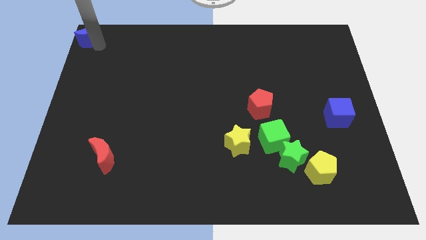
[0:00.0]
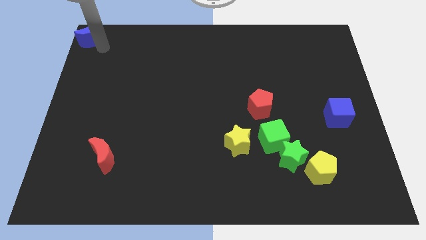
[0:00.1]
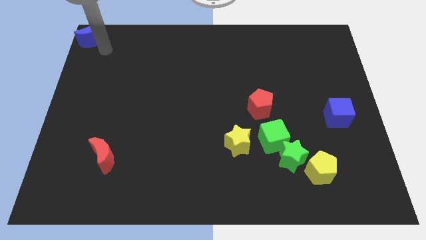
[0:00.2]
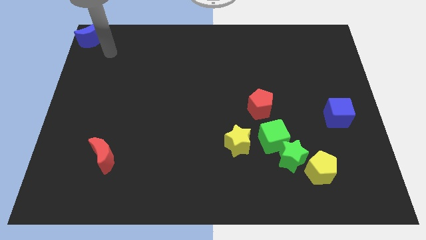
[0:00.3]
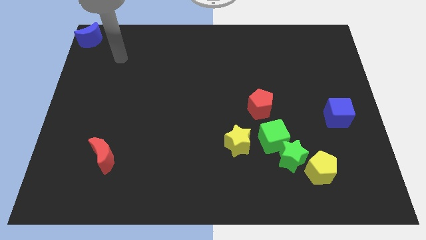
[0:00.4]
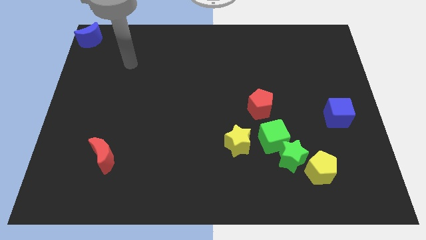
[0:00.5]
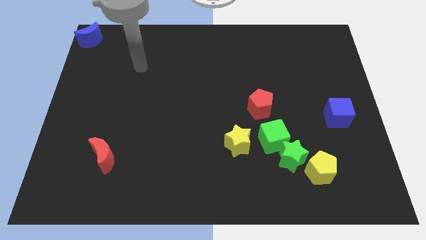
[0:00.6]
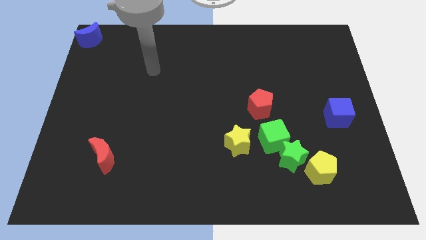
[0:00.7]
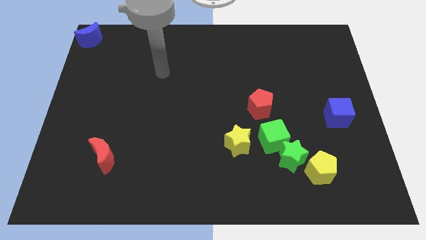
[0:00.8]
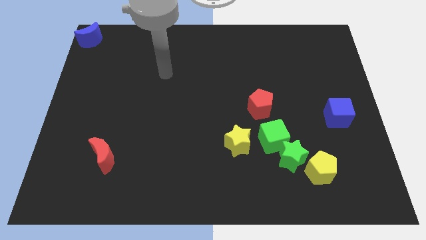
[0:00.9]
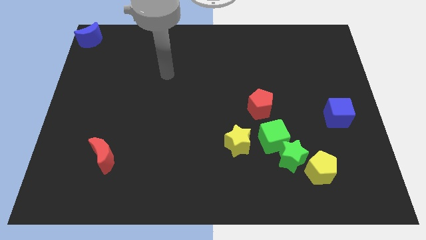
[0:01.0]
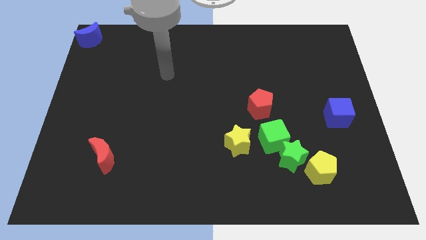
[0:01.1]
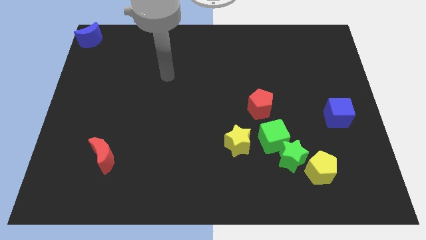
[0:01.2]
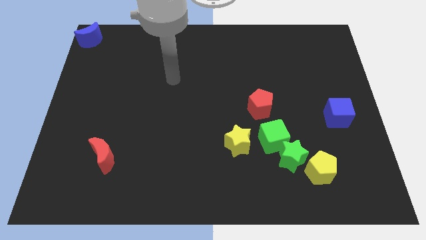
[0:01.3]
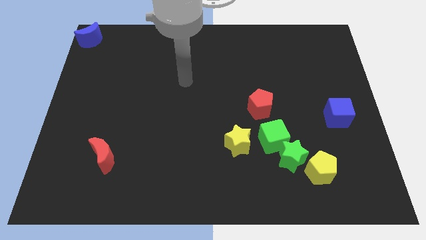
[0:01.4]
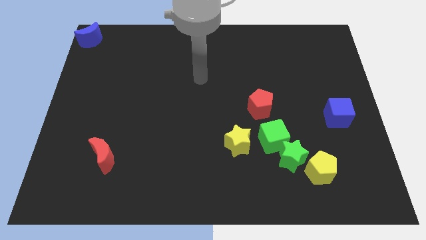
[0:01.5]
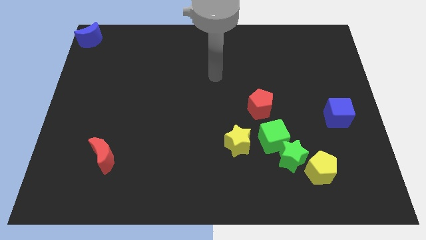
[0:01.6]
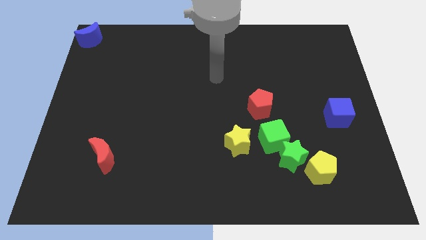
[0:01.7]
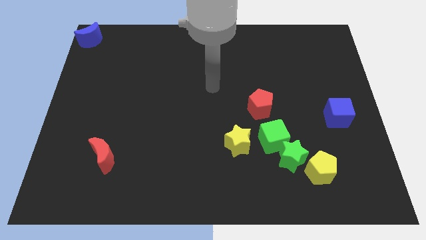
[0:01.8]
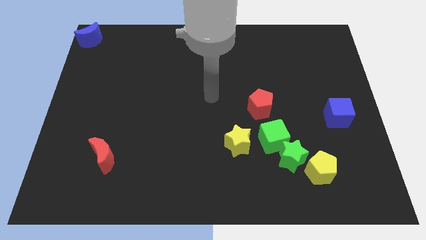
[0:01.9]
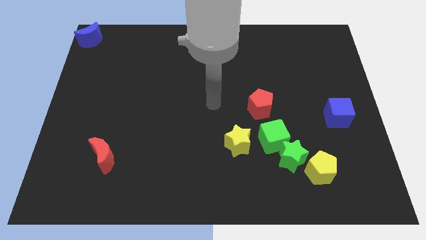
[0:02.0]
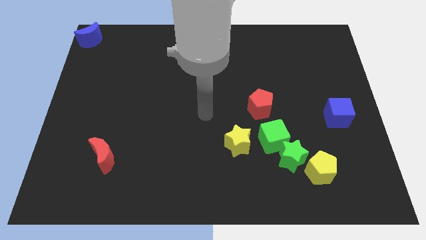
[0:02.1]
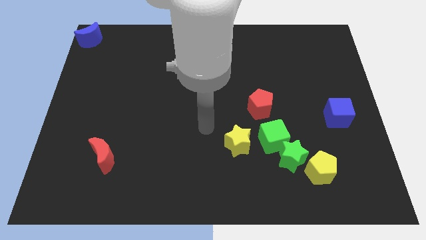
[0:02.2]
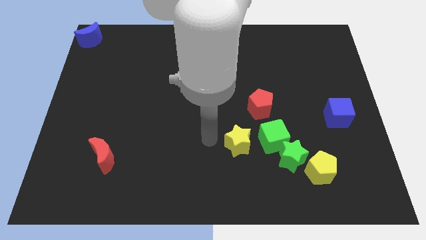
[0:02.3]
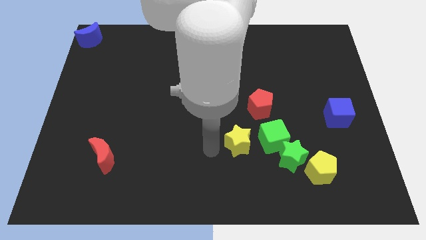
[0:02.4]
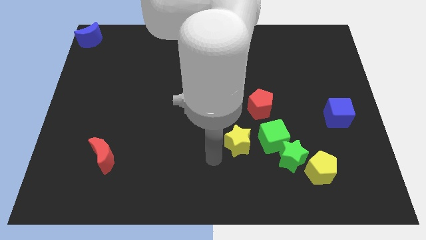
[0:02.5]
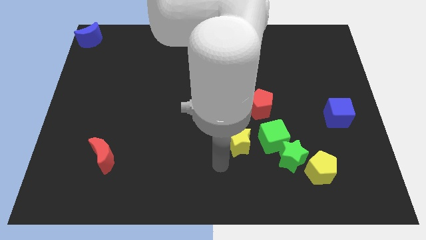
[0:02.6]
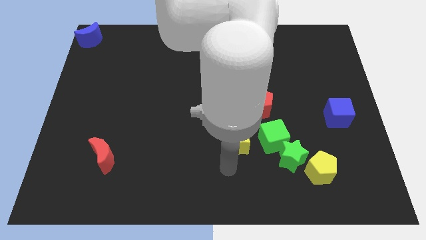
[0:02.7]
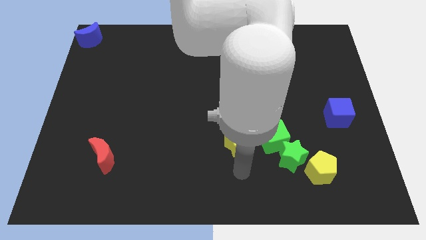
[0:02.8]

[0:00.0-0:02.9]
point the arm below the yellow star

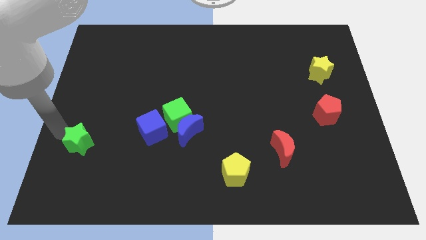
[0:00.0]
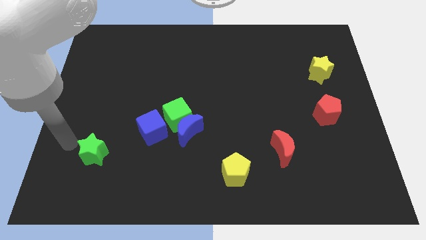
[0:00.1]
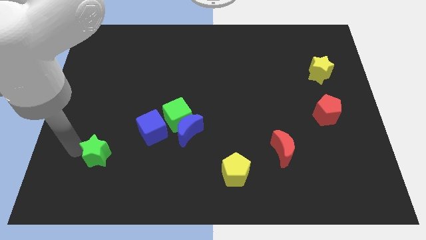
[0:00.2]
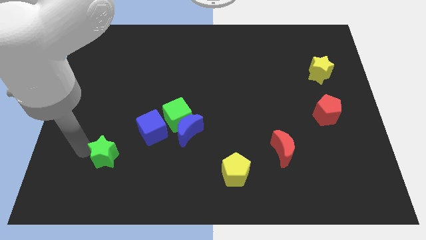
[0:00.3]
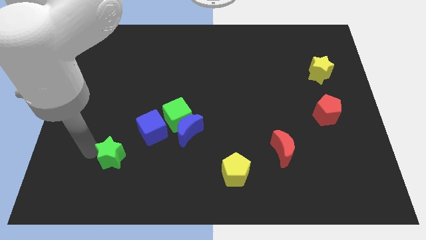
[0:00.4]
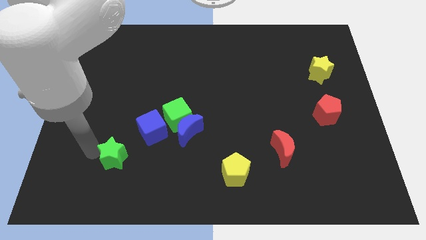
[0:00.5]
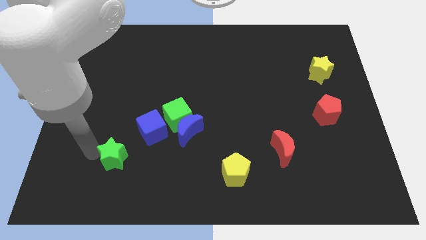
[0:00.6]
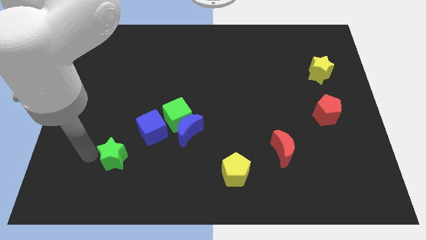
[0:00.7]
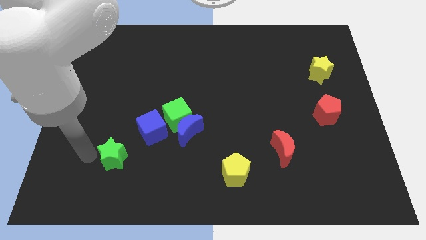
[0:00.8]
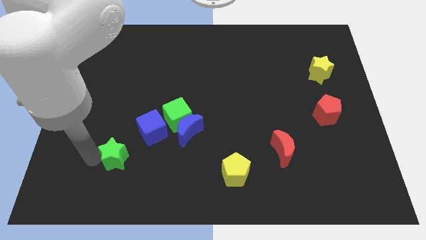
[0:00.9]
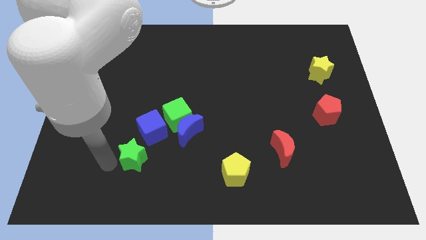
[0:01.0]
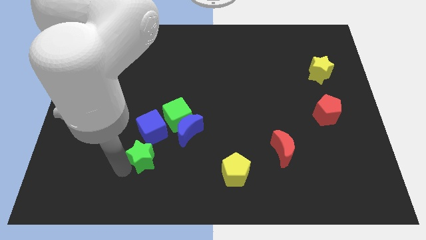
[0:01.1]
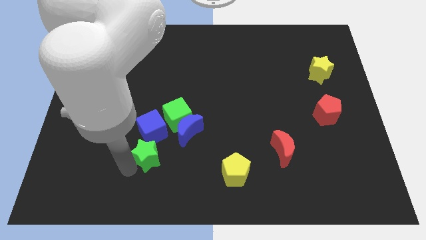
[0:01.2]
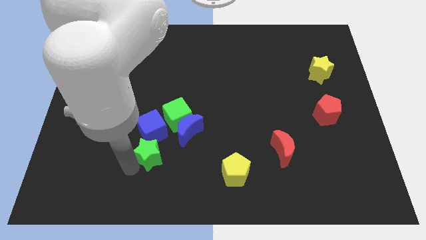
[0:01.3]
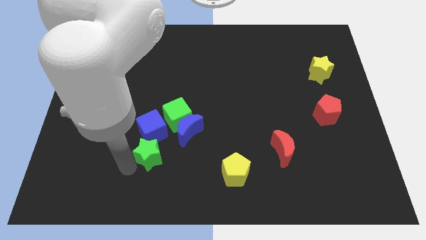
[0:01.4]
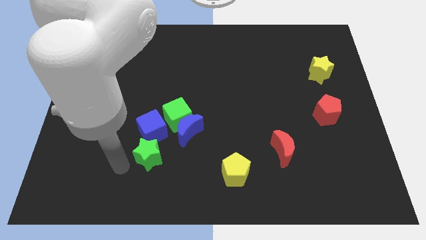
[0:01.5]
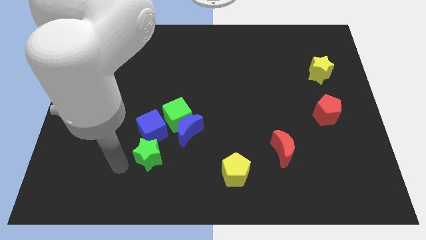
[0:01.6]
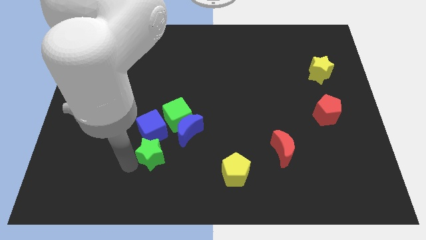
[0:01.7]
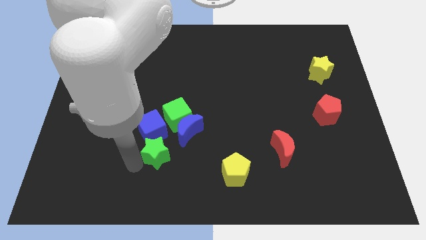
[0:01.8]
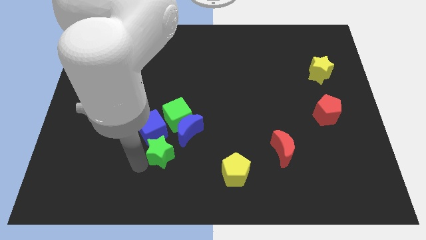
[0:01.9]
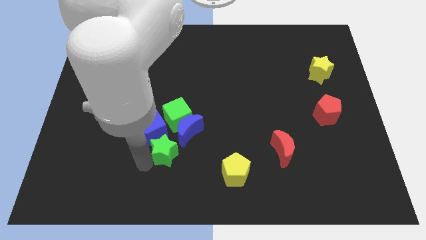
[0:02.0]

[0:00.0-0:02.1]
place the green star to the bottom of the blue cube

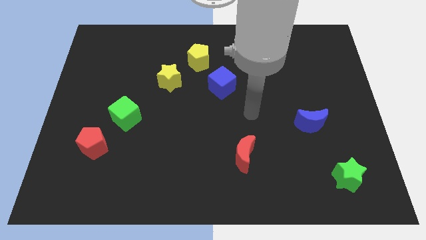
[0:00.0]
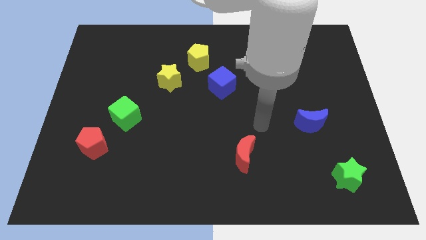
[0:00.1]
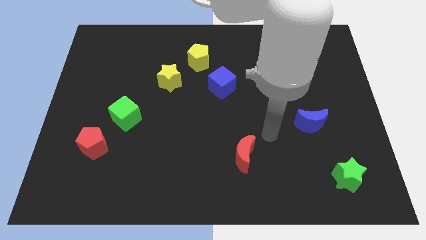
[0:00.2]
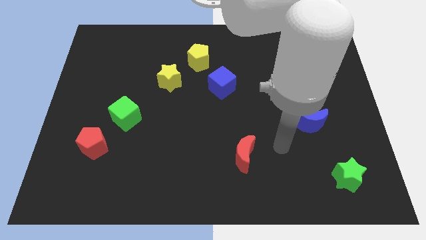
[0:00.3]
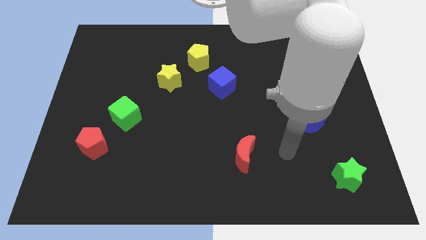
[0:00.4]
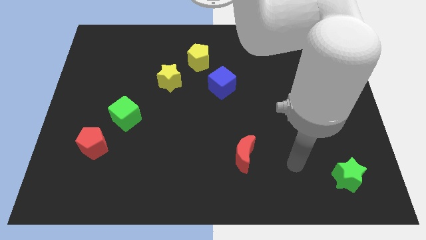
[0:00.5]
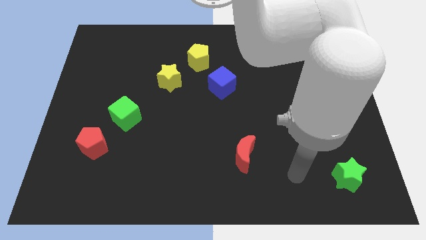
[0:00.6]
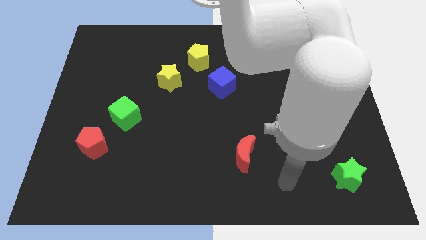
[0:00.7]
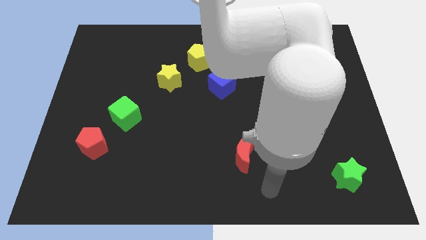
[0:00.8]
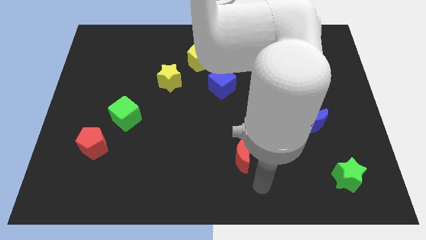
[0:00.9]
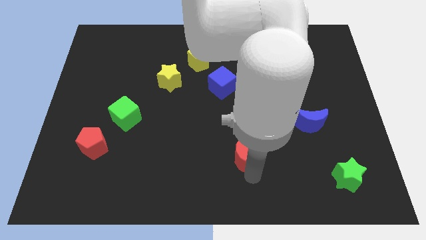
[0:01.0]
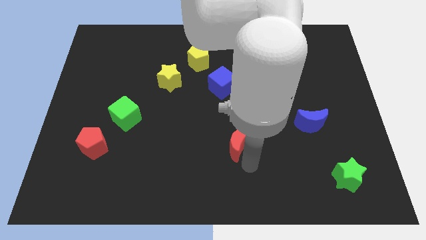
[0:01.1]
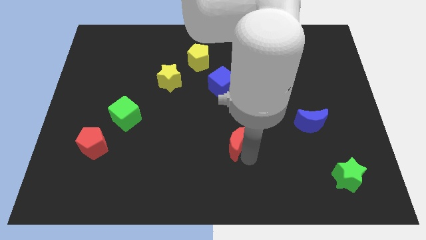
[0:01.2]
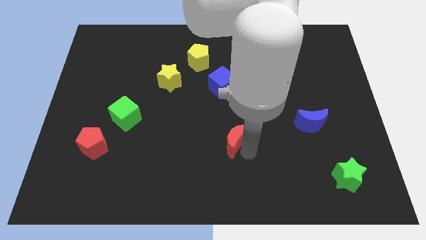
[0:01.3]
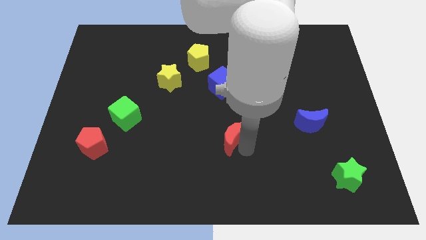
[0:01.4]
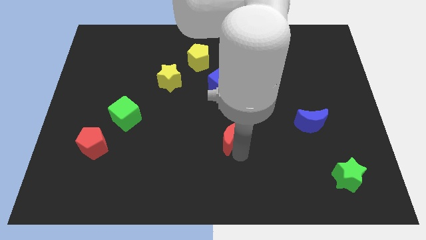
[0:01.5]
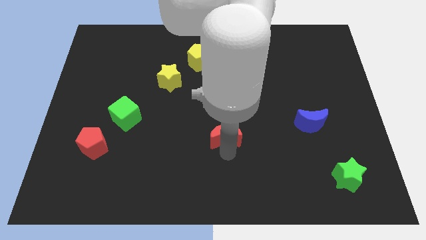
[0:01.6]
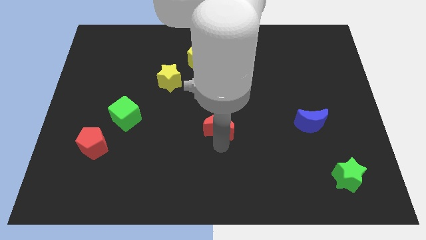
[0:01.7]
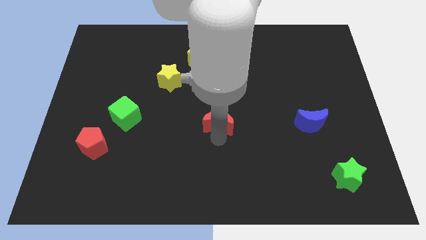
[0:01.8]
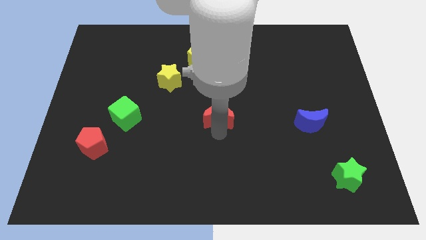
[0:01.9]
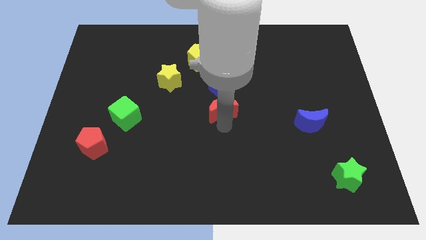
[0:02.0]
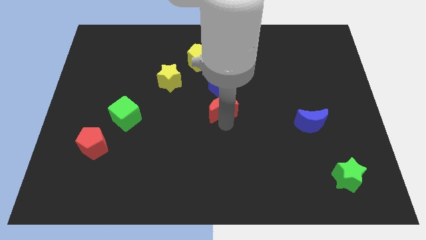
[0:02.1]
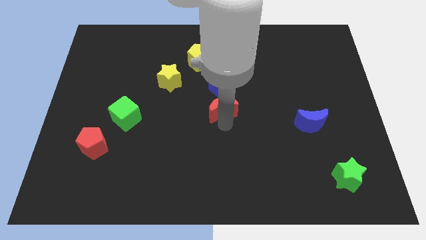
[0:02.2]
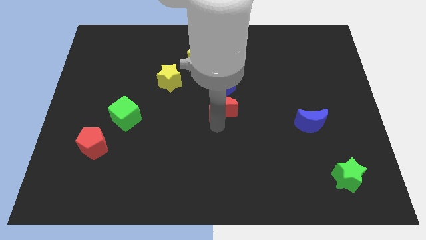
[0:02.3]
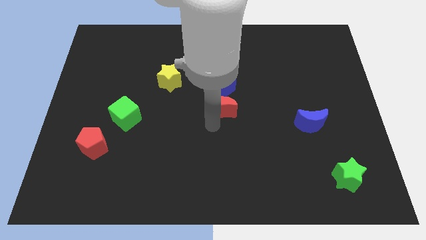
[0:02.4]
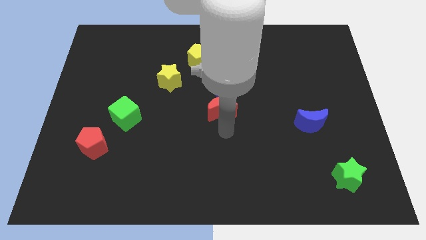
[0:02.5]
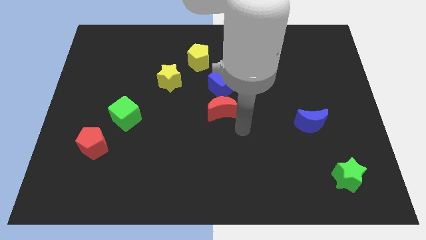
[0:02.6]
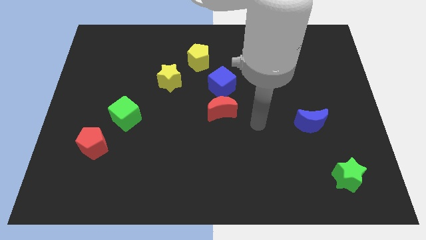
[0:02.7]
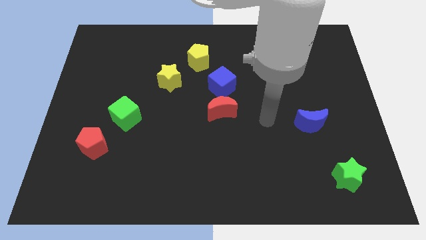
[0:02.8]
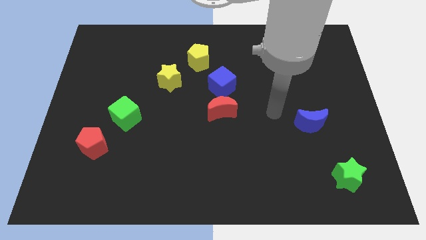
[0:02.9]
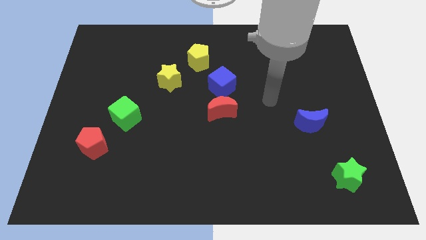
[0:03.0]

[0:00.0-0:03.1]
place the red moon below the blue cube

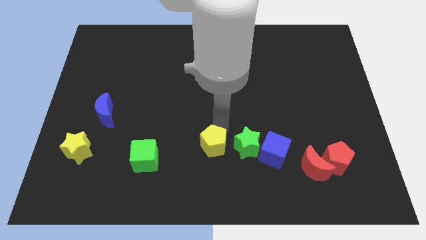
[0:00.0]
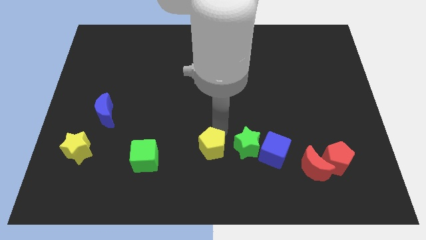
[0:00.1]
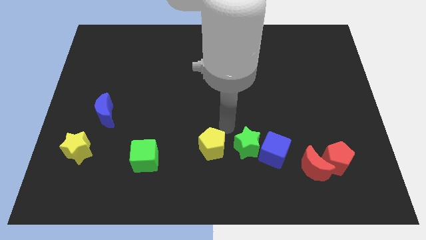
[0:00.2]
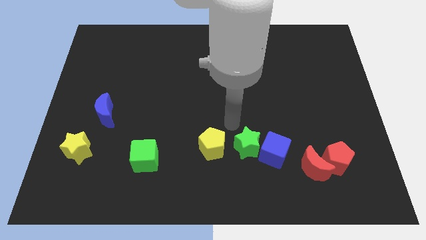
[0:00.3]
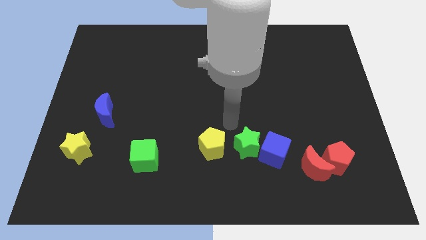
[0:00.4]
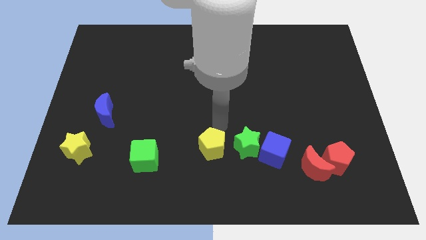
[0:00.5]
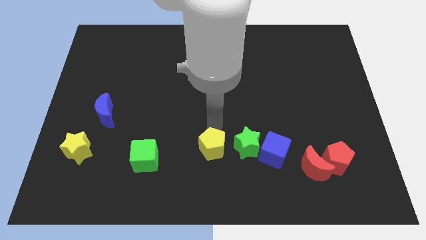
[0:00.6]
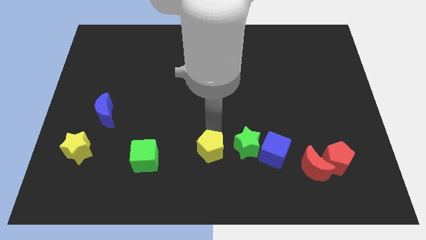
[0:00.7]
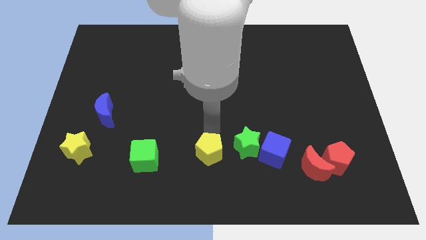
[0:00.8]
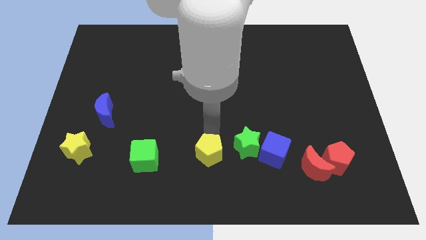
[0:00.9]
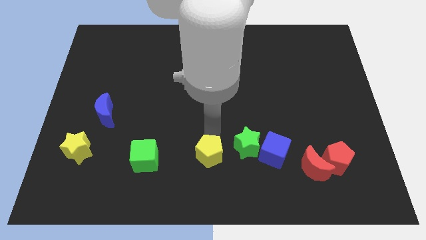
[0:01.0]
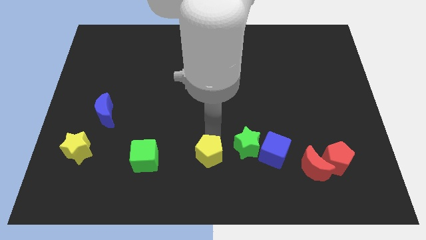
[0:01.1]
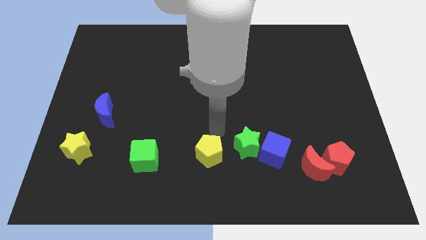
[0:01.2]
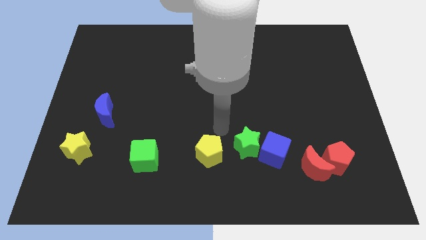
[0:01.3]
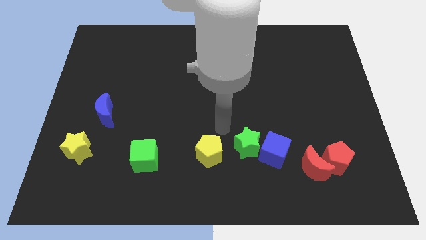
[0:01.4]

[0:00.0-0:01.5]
move the yellow pentagon right to the green cube
